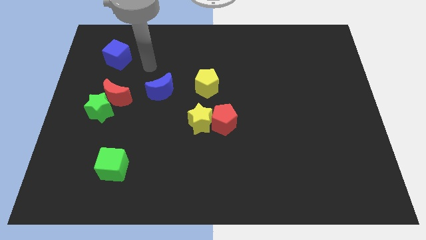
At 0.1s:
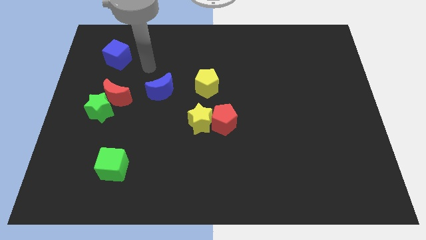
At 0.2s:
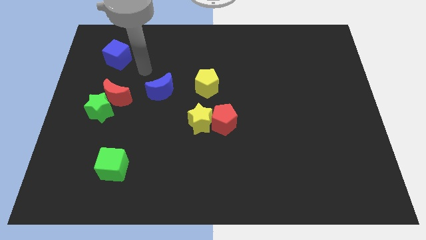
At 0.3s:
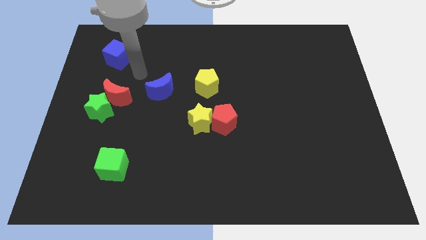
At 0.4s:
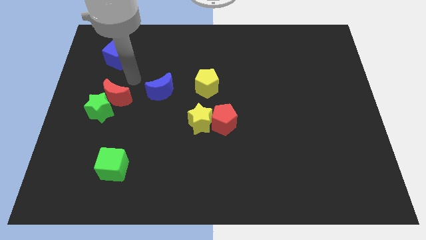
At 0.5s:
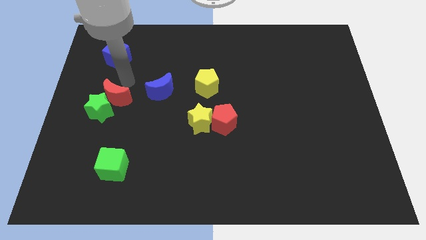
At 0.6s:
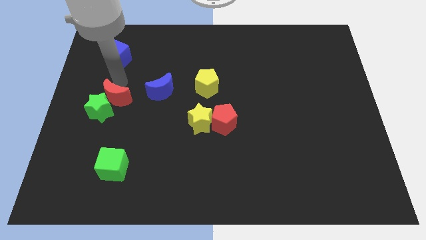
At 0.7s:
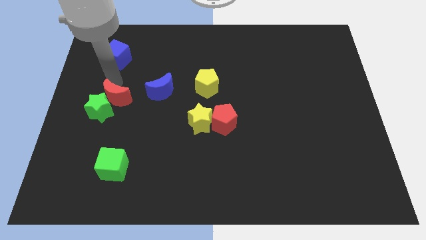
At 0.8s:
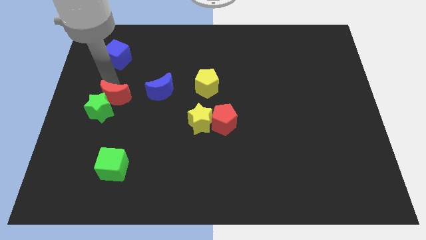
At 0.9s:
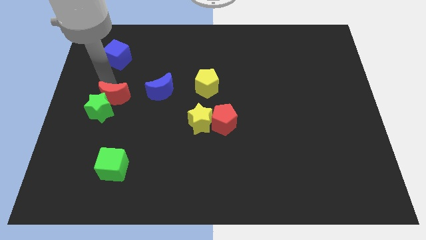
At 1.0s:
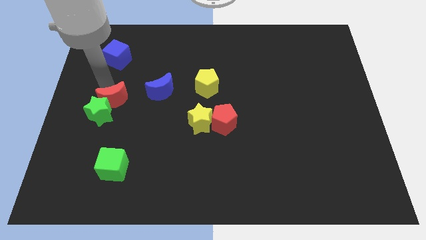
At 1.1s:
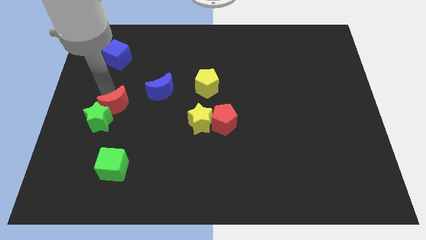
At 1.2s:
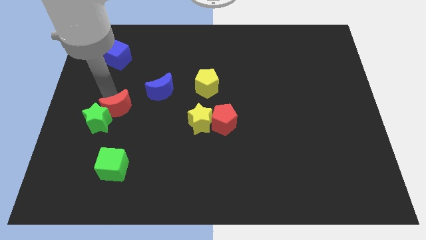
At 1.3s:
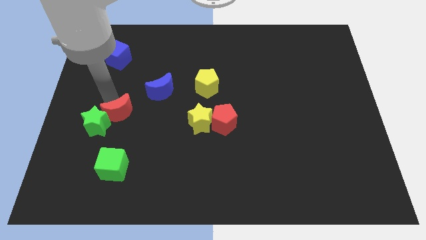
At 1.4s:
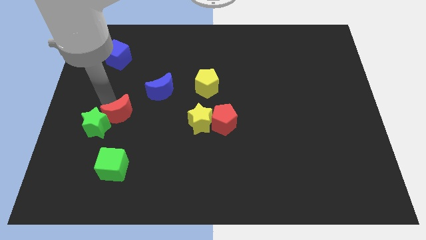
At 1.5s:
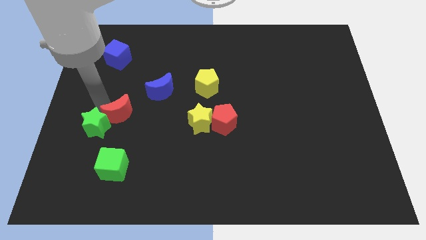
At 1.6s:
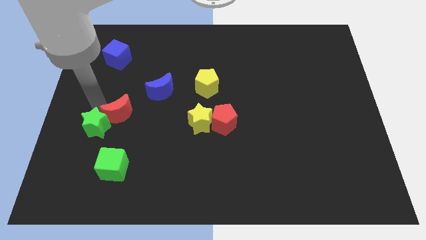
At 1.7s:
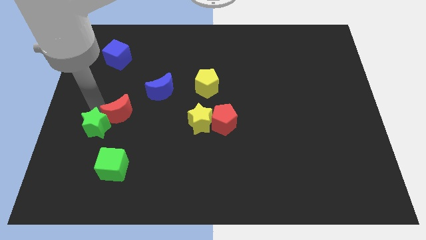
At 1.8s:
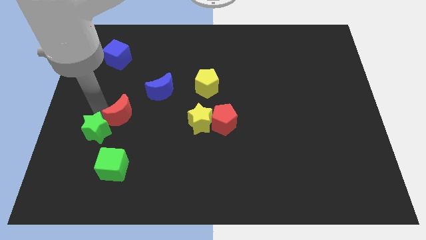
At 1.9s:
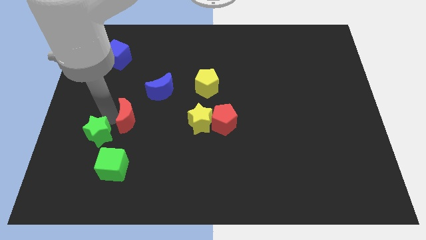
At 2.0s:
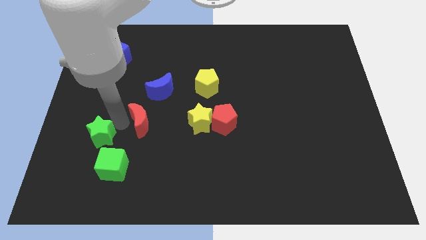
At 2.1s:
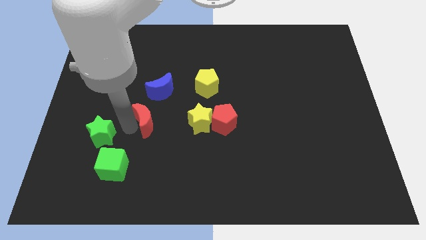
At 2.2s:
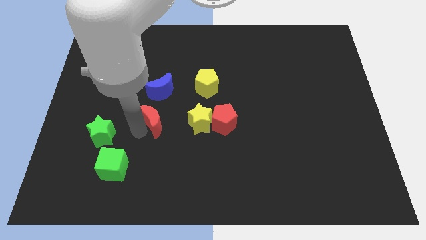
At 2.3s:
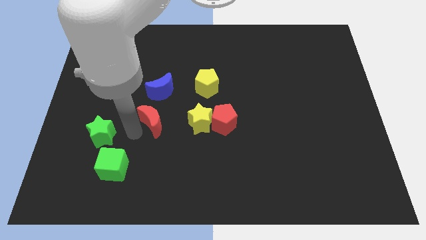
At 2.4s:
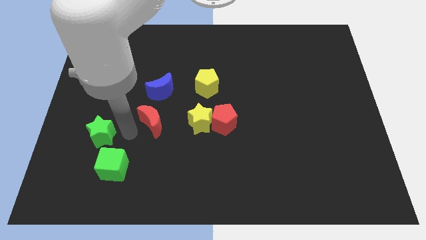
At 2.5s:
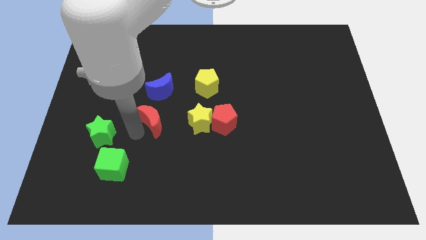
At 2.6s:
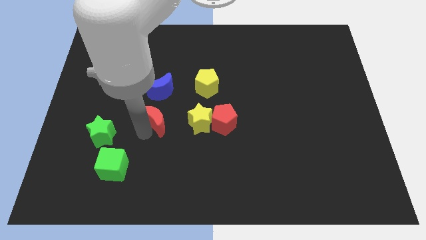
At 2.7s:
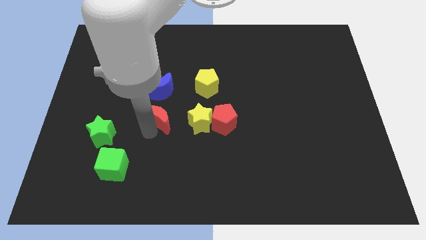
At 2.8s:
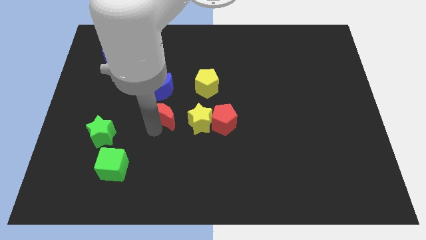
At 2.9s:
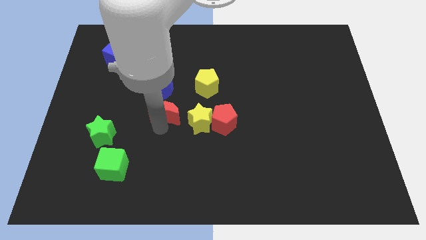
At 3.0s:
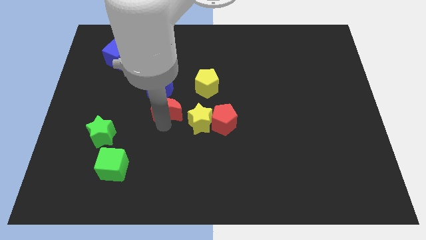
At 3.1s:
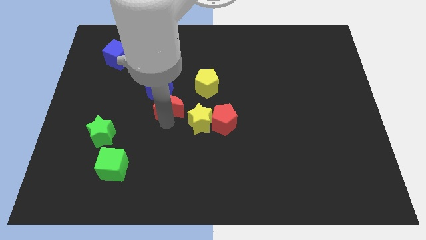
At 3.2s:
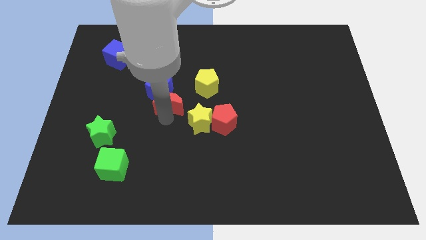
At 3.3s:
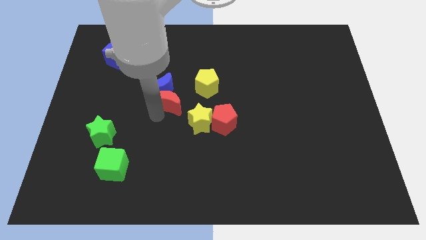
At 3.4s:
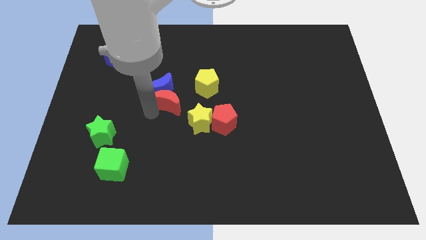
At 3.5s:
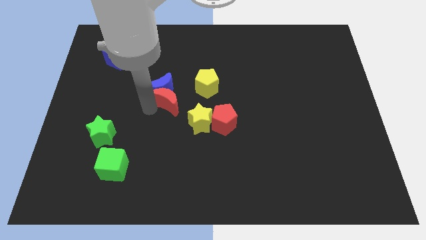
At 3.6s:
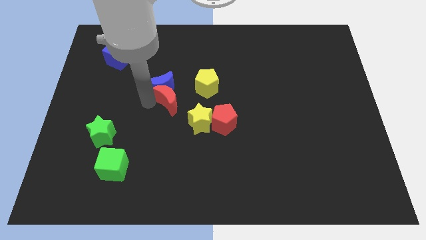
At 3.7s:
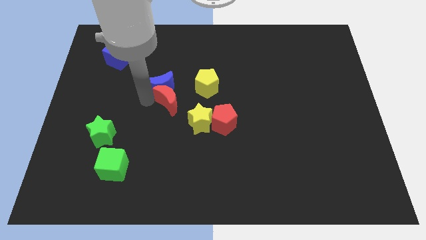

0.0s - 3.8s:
move the red crescent below the blue crescent

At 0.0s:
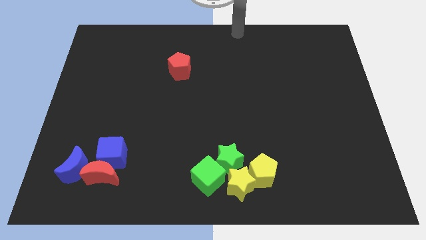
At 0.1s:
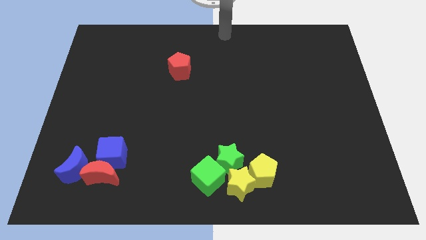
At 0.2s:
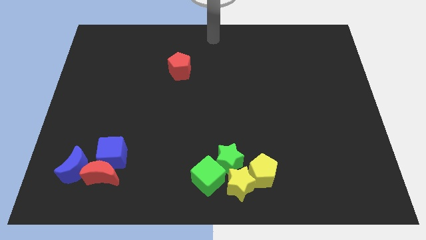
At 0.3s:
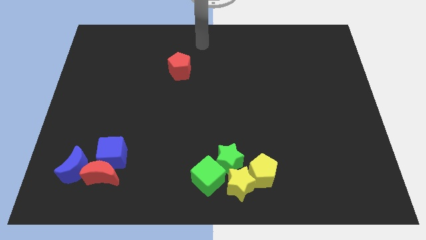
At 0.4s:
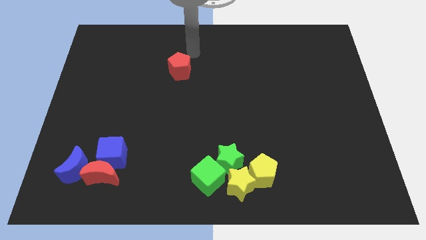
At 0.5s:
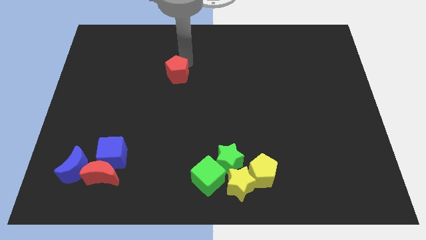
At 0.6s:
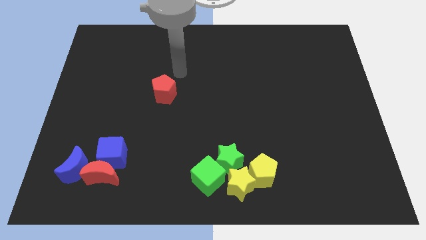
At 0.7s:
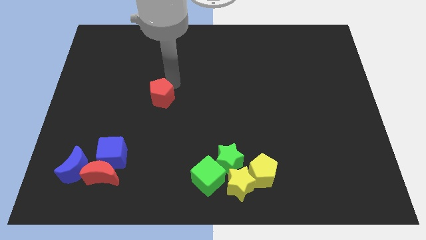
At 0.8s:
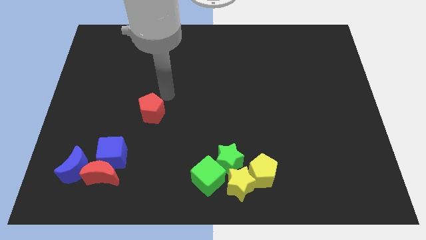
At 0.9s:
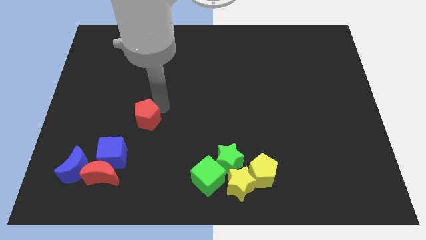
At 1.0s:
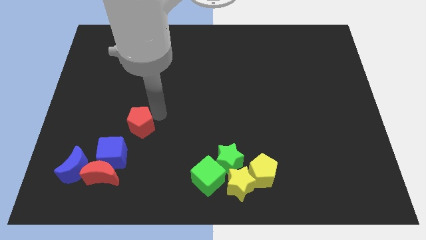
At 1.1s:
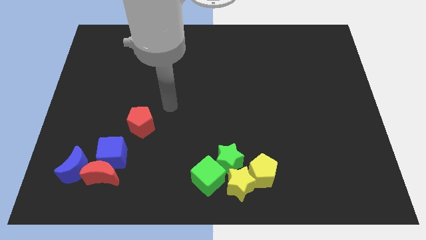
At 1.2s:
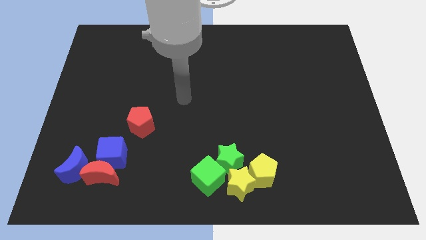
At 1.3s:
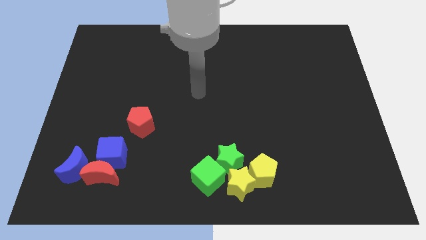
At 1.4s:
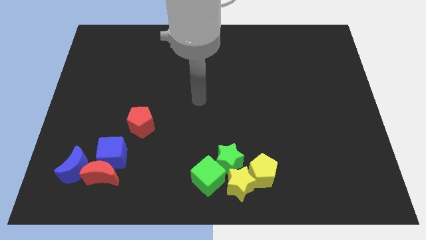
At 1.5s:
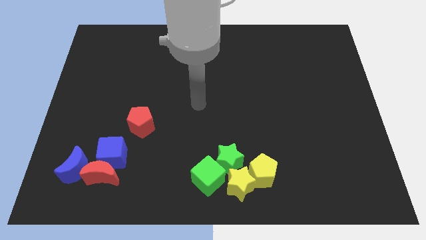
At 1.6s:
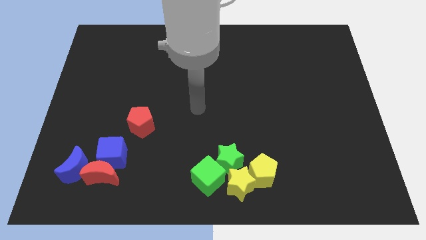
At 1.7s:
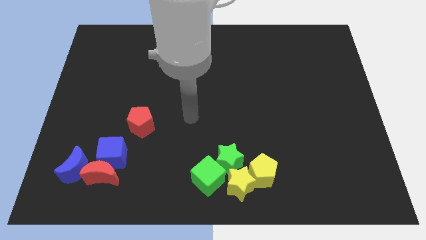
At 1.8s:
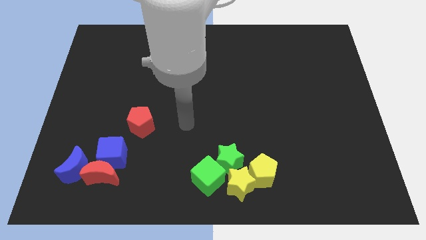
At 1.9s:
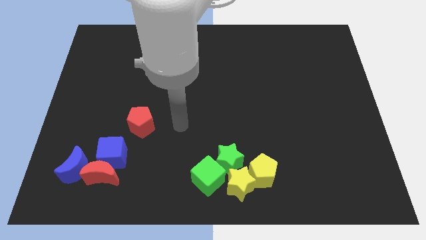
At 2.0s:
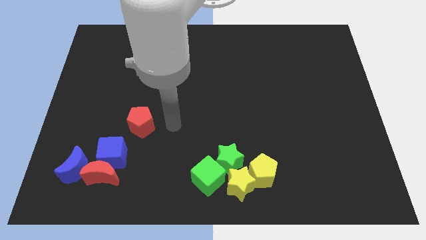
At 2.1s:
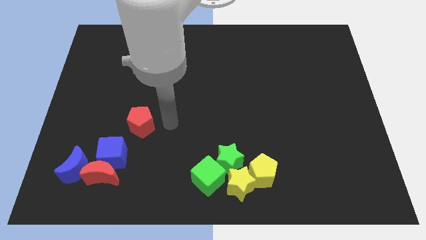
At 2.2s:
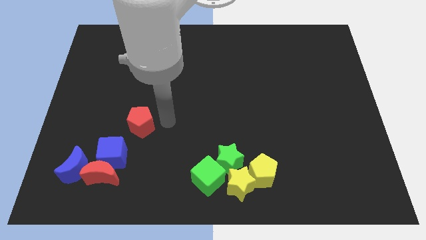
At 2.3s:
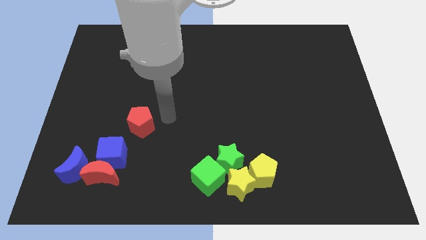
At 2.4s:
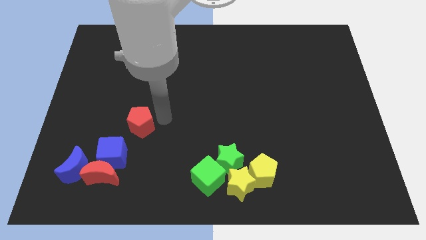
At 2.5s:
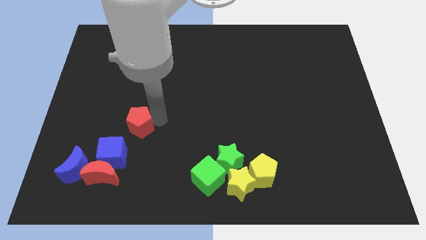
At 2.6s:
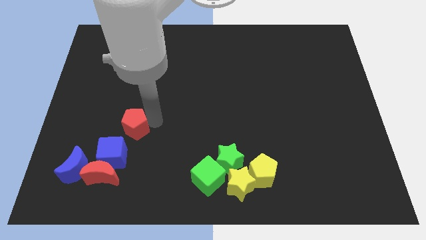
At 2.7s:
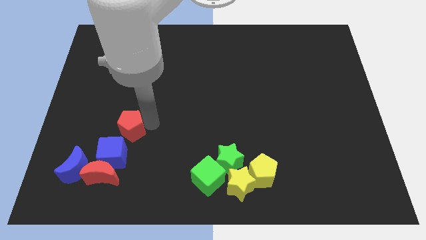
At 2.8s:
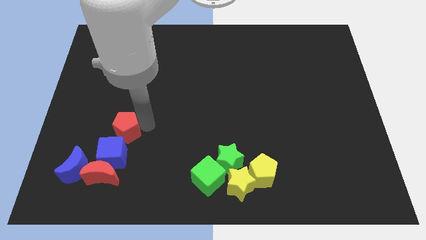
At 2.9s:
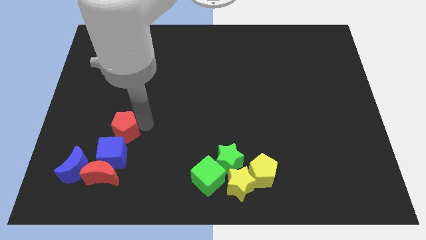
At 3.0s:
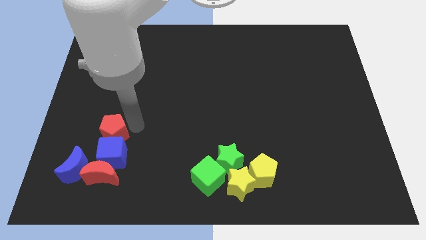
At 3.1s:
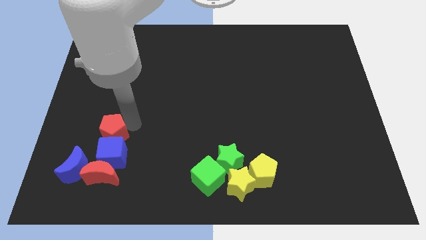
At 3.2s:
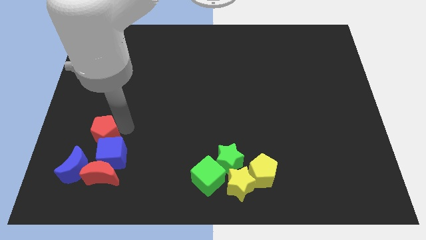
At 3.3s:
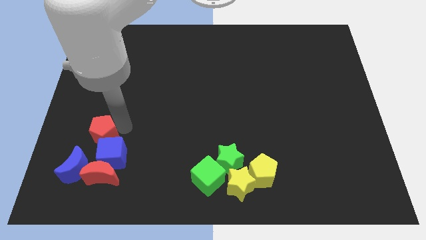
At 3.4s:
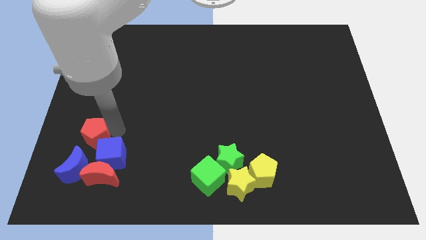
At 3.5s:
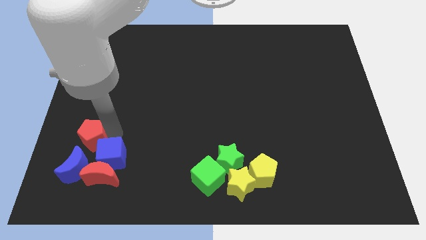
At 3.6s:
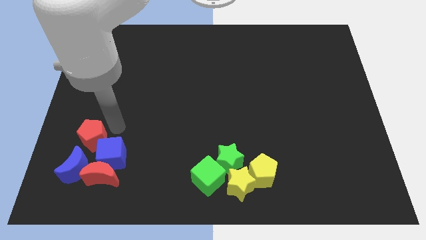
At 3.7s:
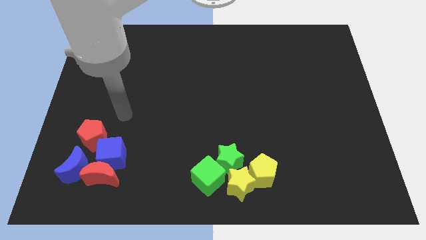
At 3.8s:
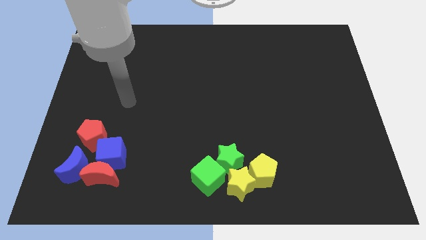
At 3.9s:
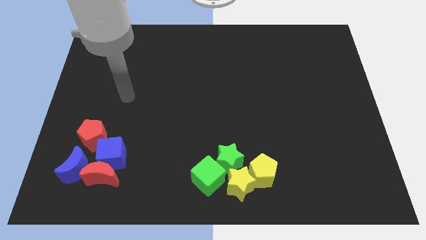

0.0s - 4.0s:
place the red pentagon at the top of blue blocks

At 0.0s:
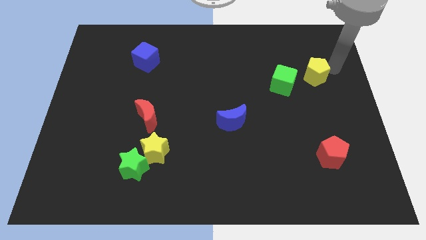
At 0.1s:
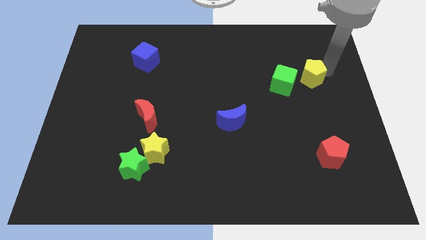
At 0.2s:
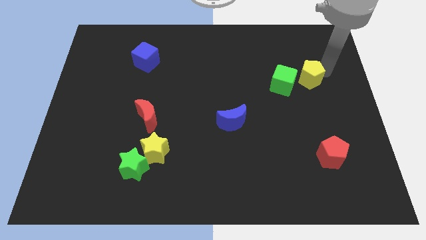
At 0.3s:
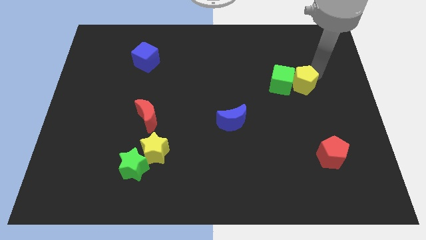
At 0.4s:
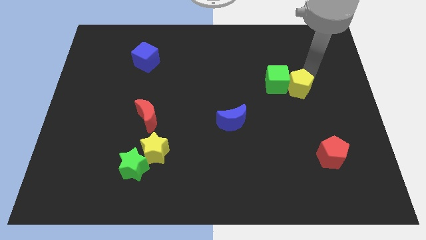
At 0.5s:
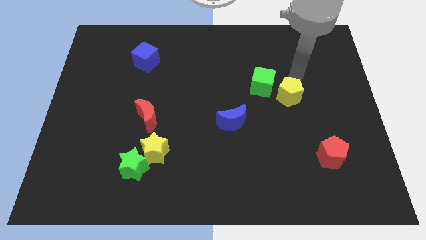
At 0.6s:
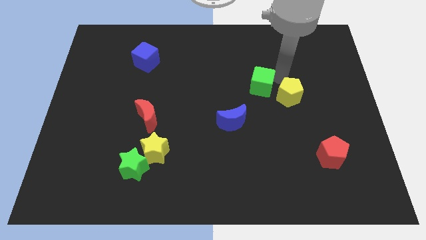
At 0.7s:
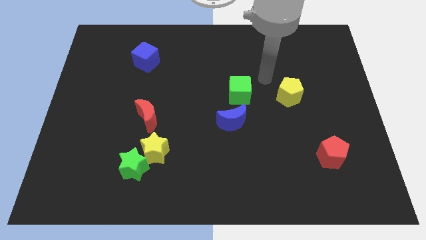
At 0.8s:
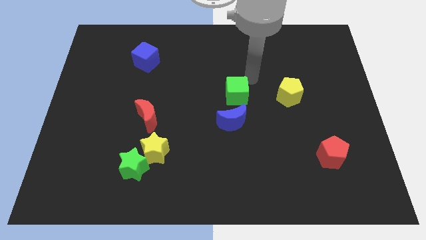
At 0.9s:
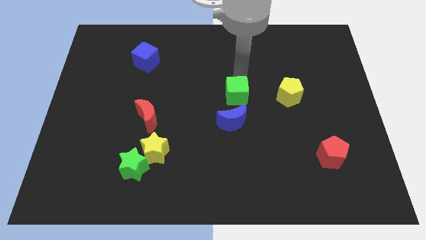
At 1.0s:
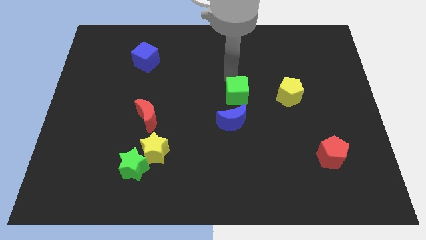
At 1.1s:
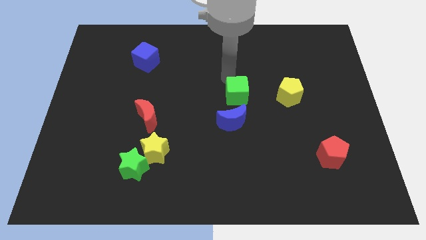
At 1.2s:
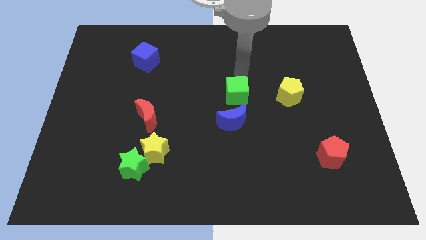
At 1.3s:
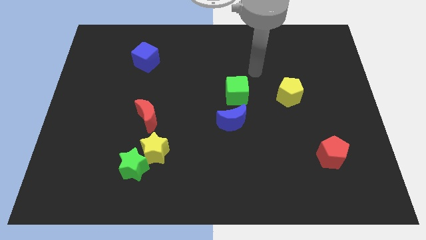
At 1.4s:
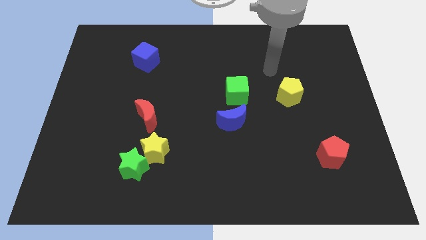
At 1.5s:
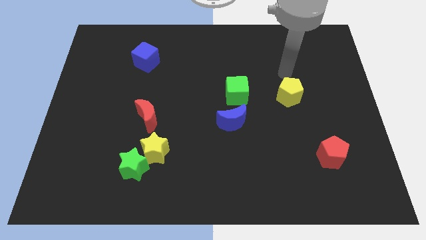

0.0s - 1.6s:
move the green cube above the blue crescent
